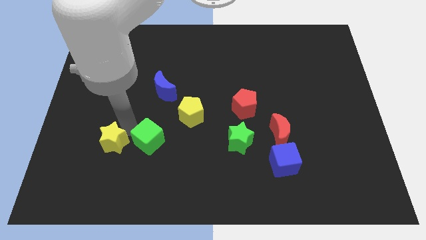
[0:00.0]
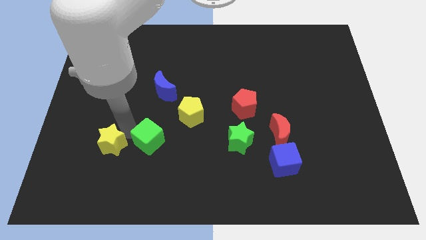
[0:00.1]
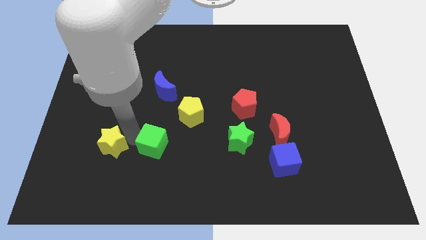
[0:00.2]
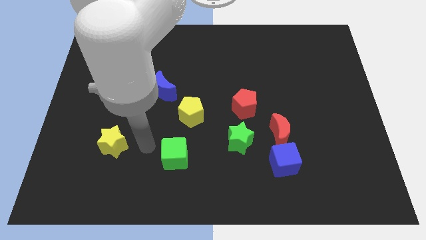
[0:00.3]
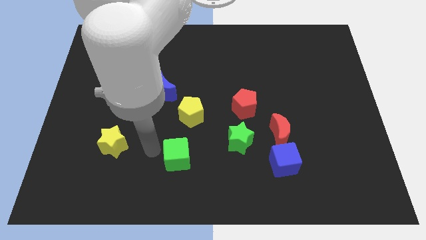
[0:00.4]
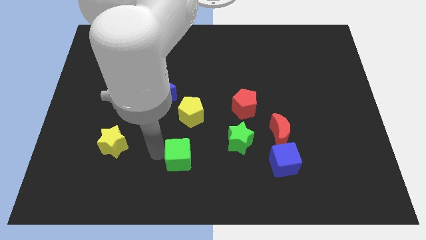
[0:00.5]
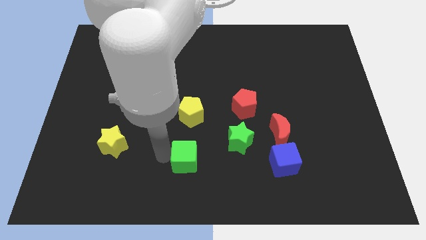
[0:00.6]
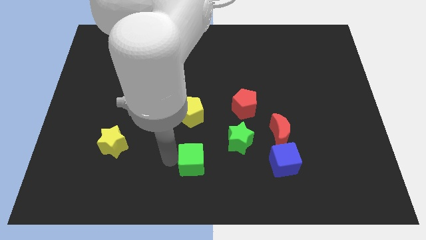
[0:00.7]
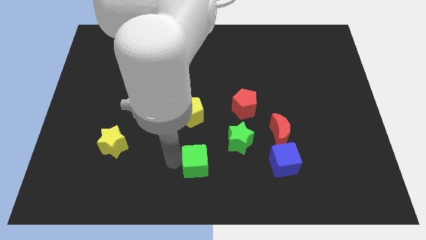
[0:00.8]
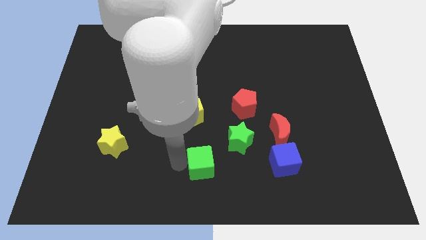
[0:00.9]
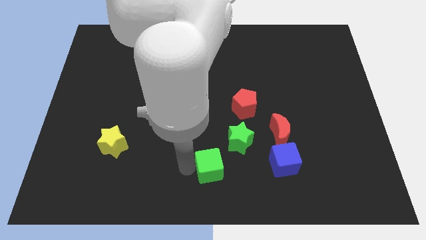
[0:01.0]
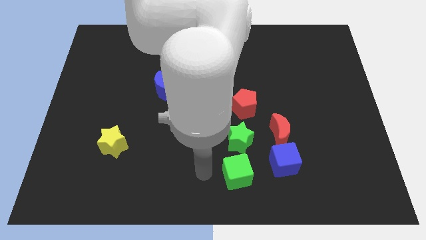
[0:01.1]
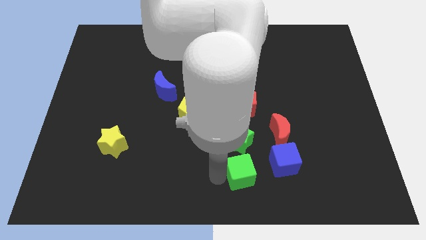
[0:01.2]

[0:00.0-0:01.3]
place green cube to the bottom of green star

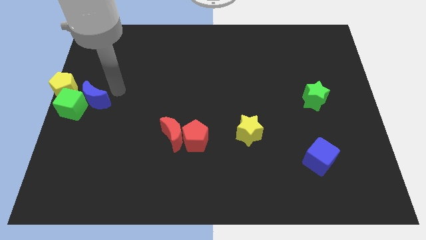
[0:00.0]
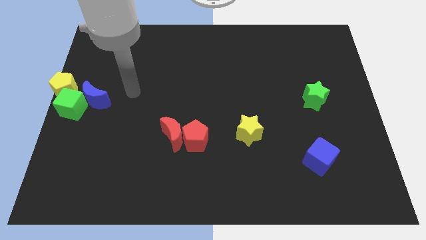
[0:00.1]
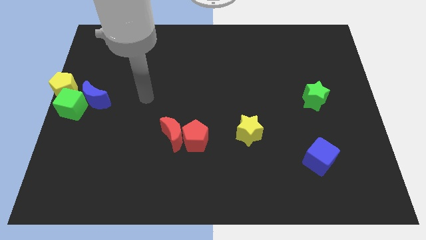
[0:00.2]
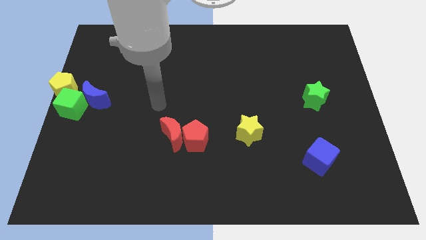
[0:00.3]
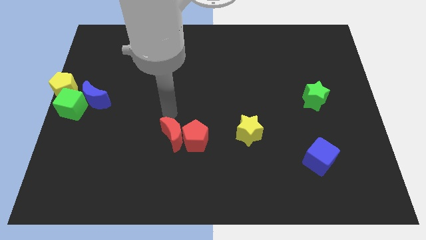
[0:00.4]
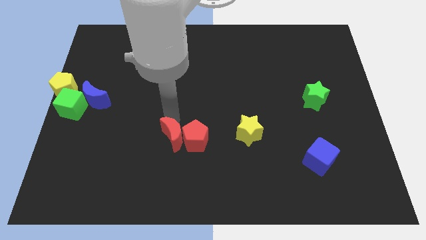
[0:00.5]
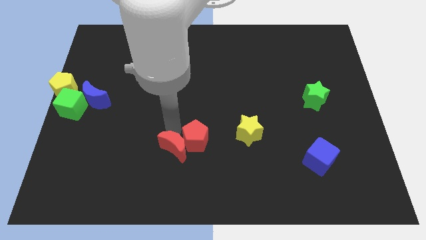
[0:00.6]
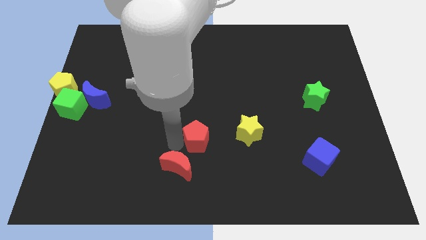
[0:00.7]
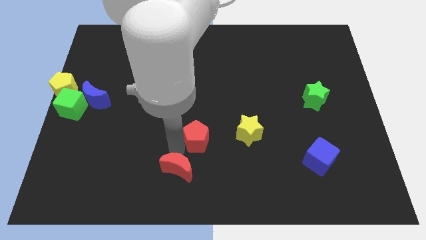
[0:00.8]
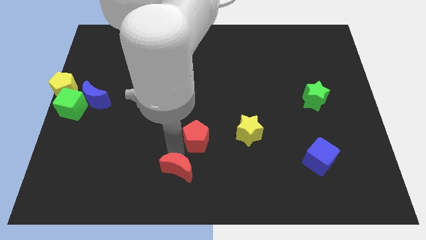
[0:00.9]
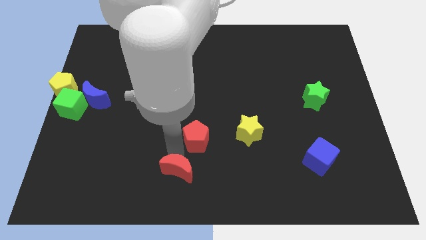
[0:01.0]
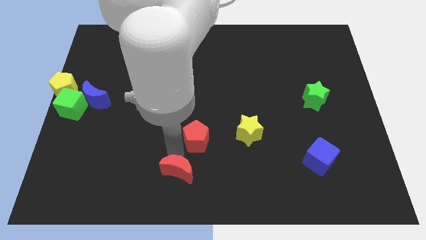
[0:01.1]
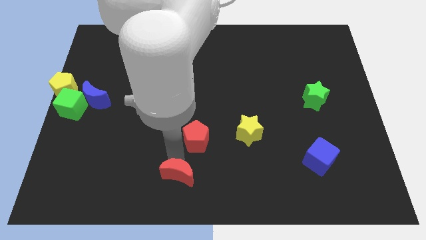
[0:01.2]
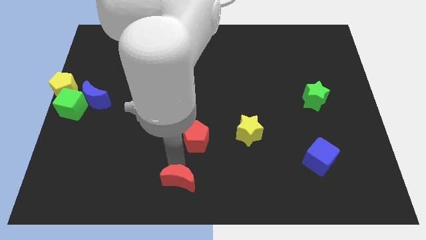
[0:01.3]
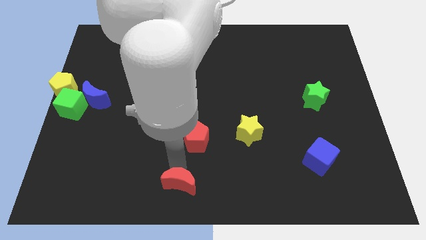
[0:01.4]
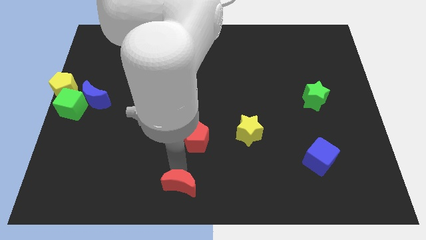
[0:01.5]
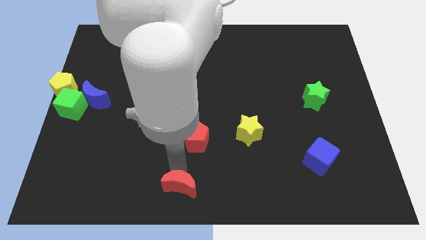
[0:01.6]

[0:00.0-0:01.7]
move the red crescent slightly to the bottom

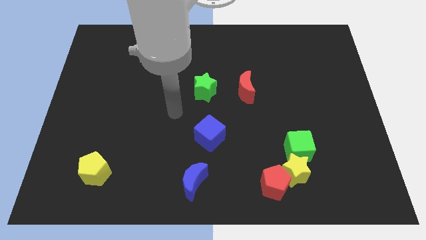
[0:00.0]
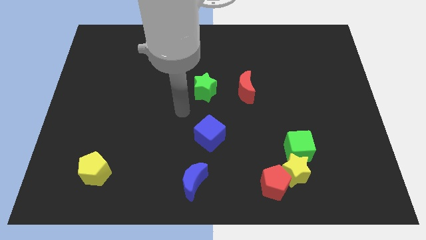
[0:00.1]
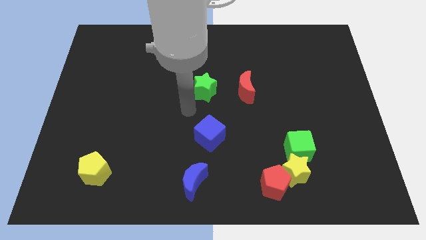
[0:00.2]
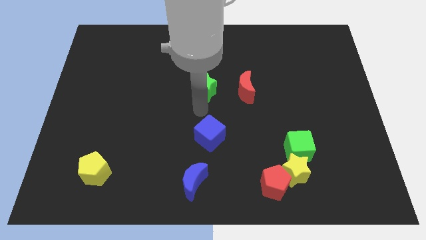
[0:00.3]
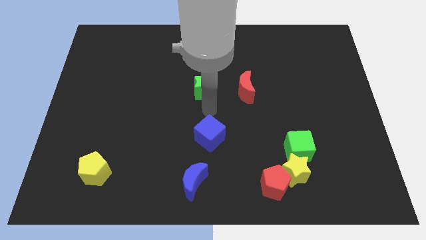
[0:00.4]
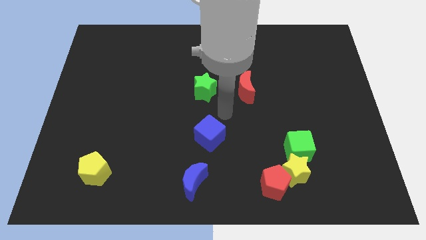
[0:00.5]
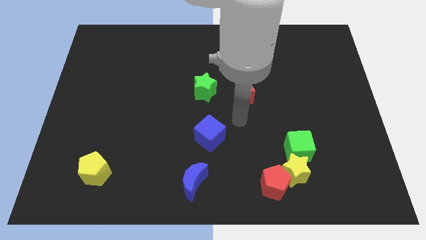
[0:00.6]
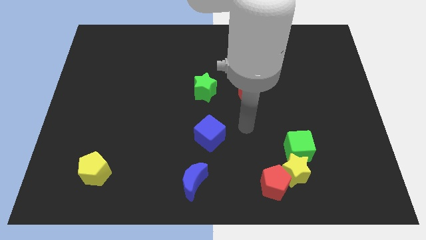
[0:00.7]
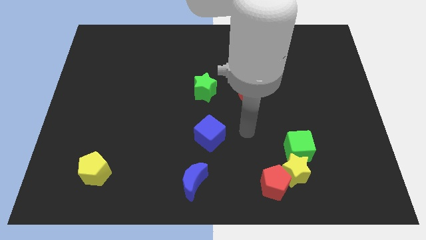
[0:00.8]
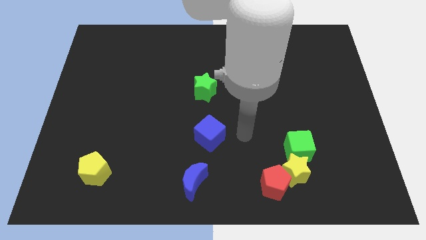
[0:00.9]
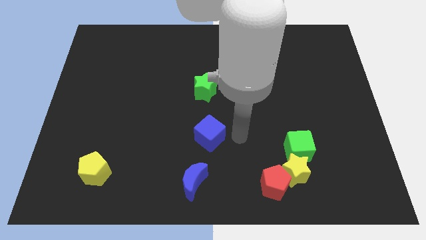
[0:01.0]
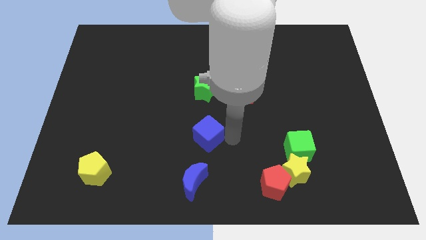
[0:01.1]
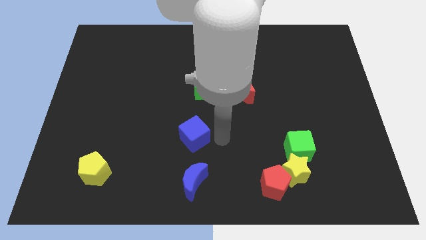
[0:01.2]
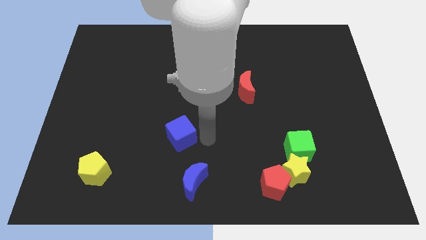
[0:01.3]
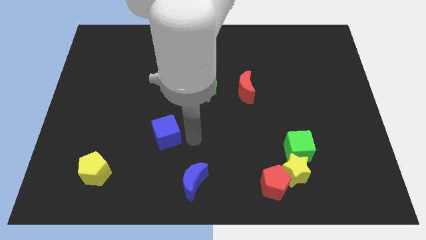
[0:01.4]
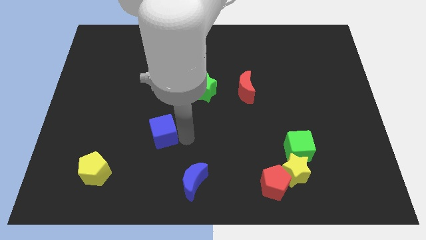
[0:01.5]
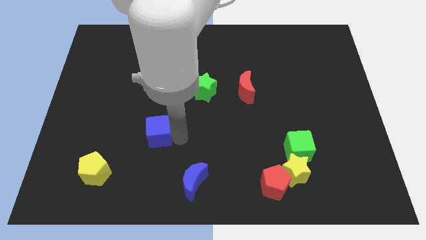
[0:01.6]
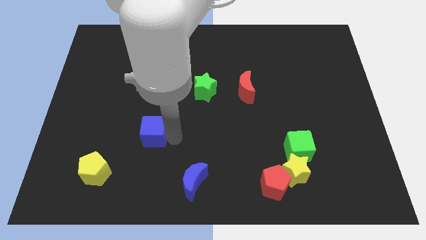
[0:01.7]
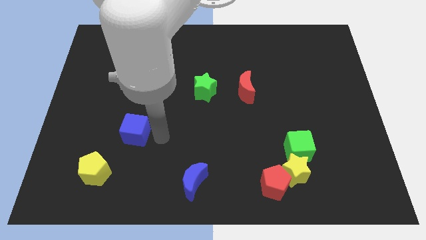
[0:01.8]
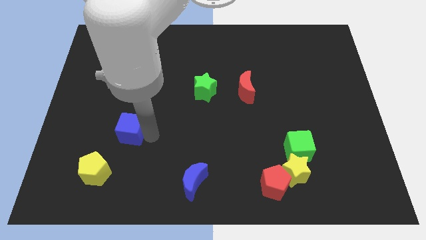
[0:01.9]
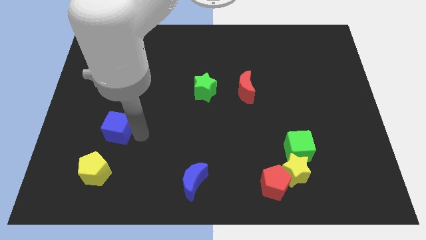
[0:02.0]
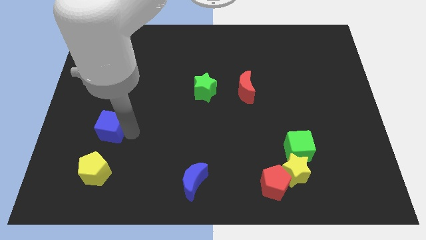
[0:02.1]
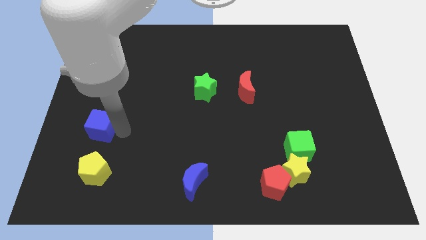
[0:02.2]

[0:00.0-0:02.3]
move the blue cube above the yellow pentagon

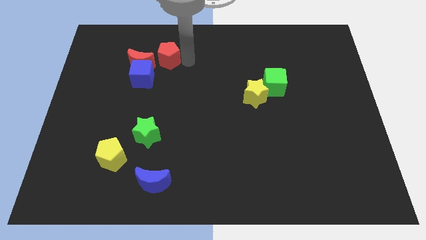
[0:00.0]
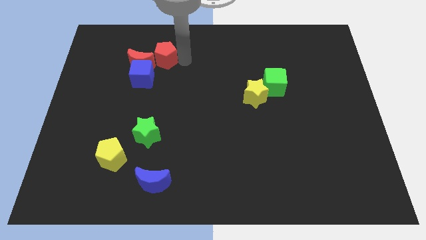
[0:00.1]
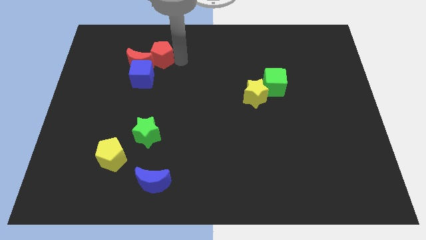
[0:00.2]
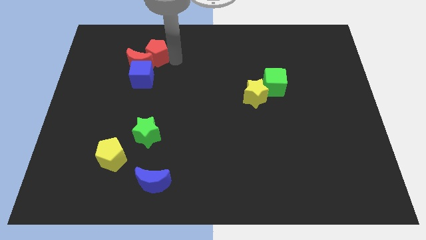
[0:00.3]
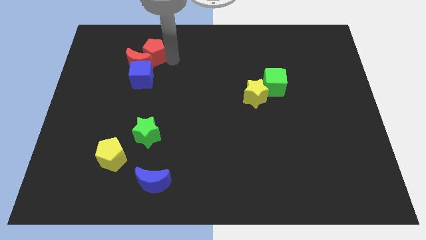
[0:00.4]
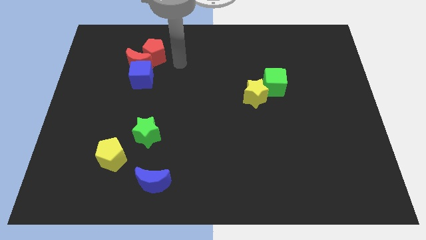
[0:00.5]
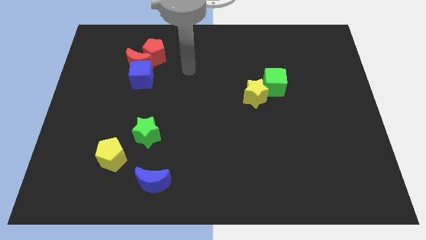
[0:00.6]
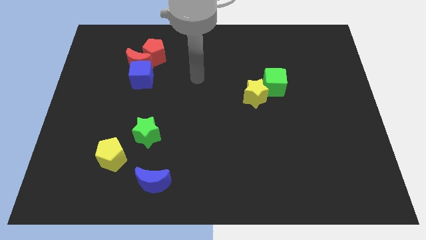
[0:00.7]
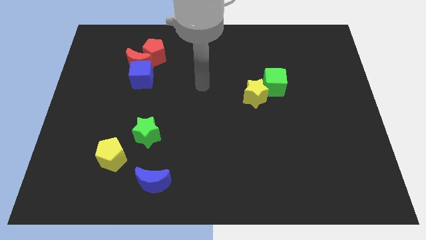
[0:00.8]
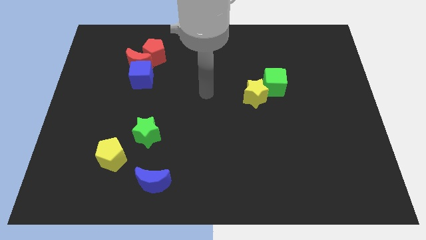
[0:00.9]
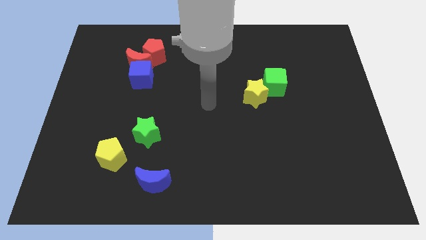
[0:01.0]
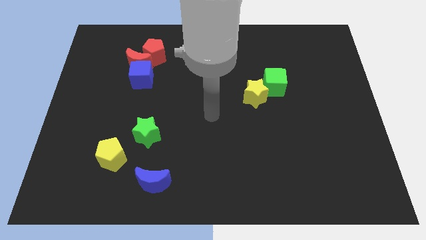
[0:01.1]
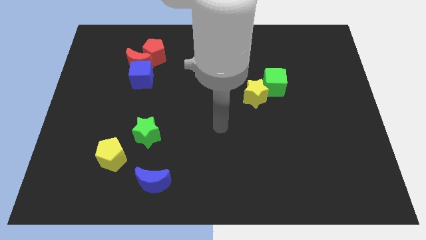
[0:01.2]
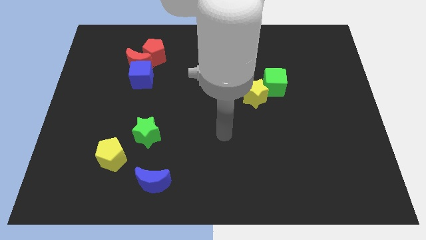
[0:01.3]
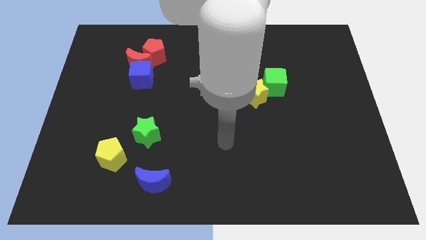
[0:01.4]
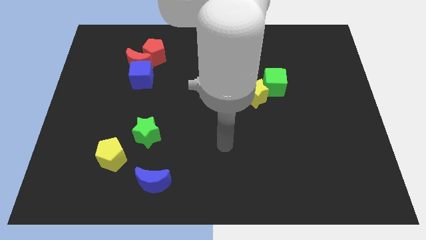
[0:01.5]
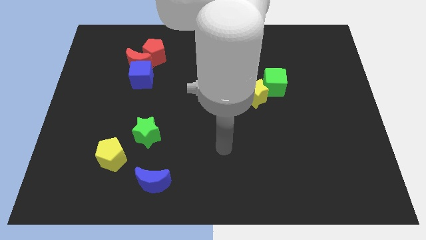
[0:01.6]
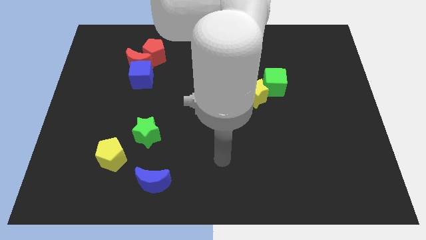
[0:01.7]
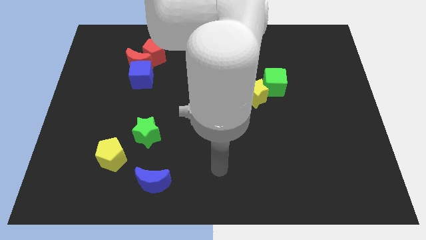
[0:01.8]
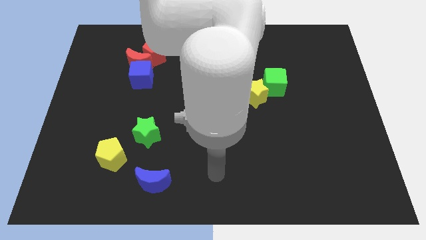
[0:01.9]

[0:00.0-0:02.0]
put the red blocks together

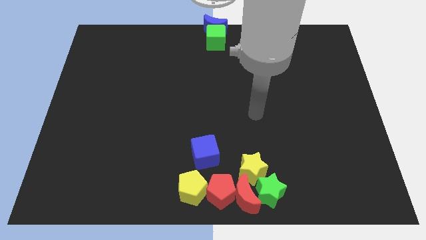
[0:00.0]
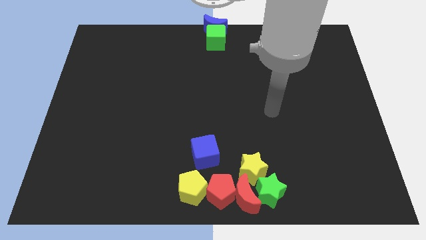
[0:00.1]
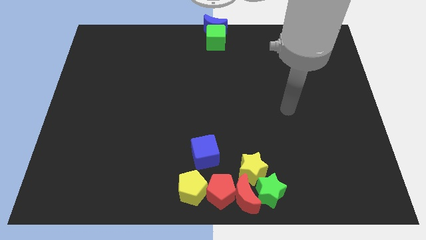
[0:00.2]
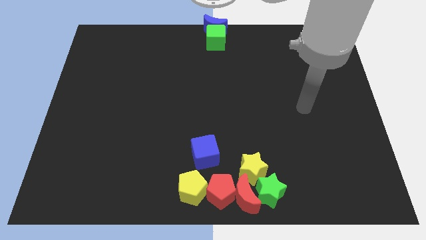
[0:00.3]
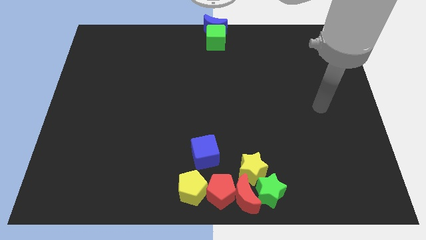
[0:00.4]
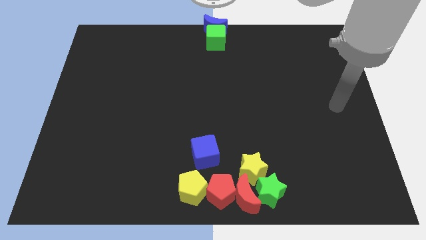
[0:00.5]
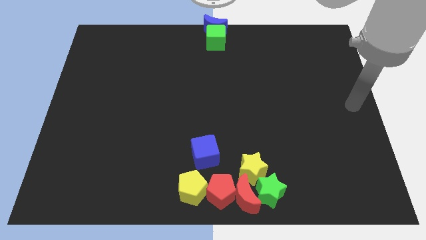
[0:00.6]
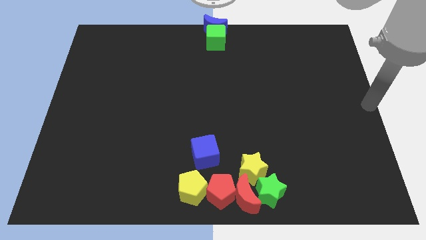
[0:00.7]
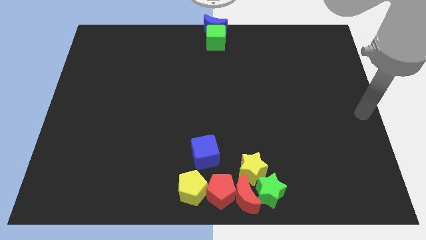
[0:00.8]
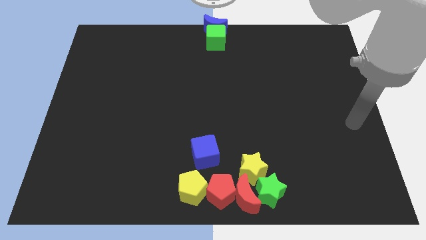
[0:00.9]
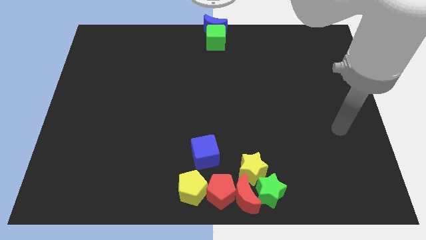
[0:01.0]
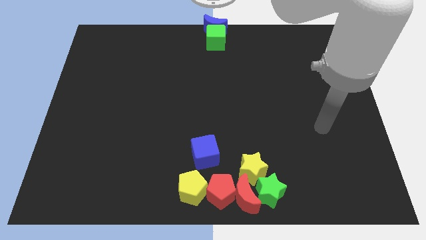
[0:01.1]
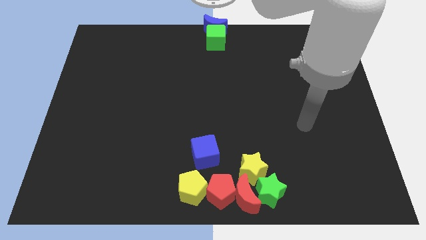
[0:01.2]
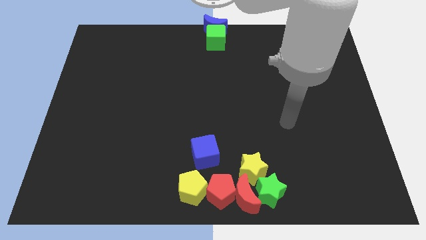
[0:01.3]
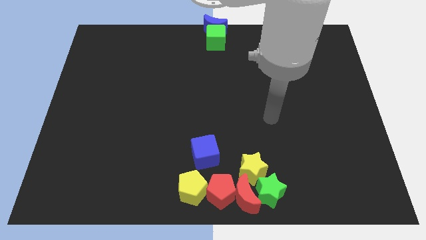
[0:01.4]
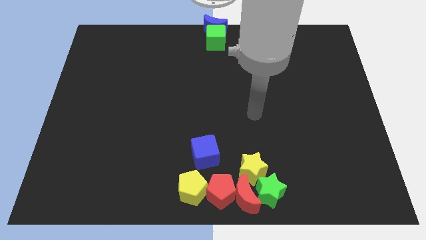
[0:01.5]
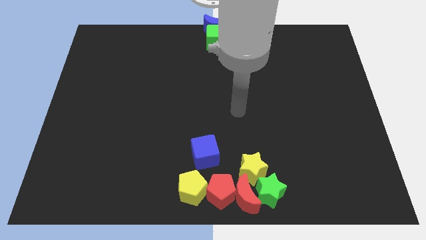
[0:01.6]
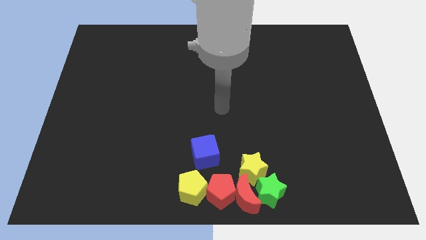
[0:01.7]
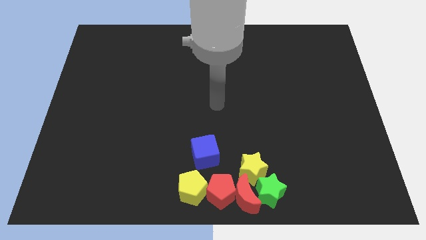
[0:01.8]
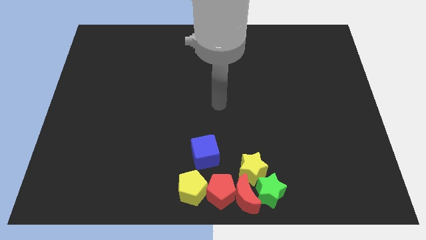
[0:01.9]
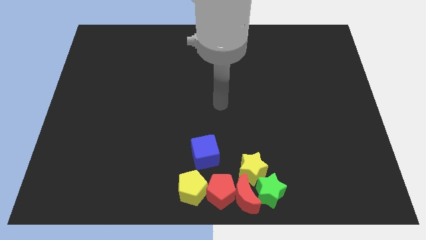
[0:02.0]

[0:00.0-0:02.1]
point your arm at the center of the board
